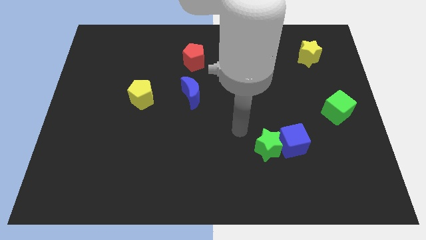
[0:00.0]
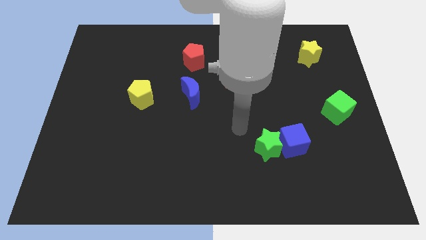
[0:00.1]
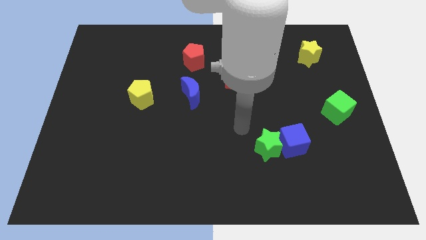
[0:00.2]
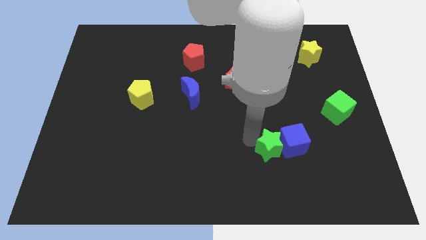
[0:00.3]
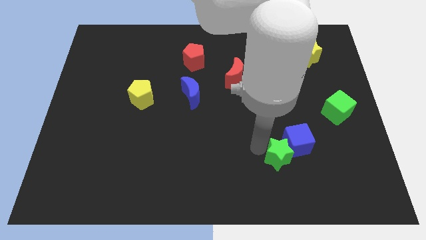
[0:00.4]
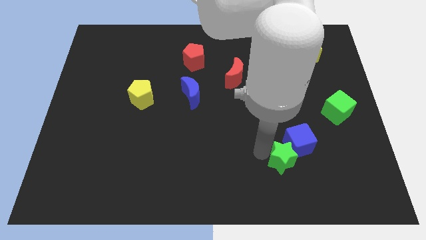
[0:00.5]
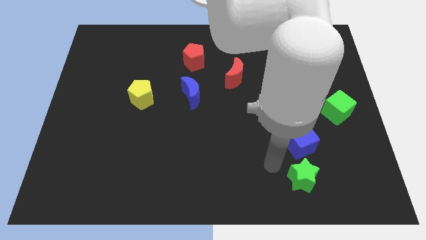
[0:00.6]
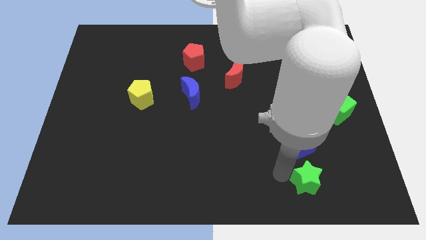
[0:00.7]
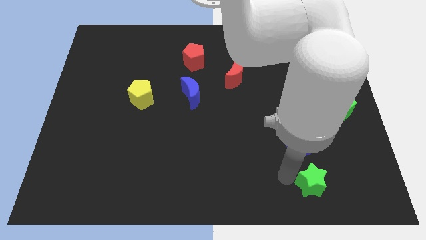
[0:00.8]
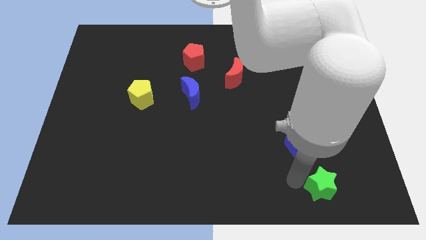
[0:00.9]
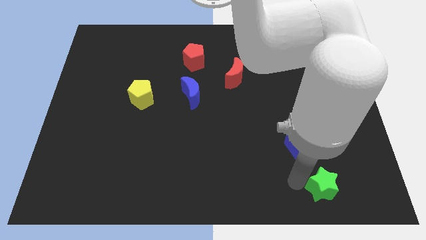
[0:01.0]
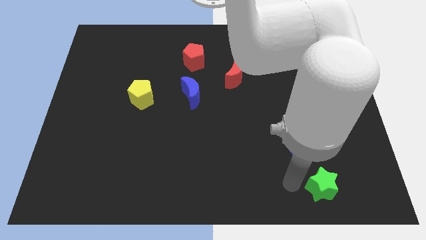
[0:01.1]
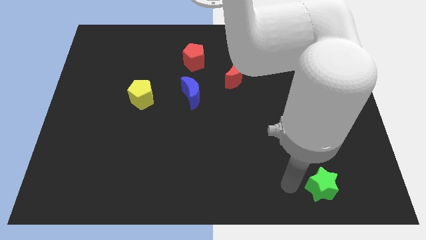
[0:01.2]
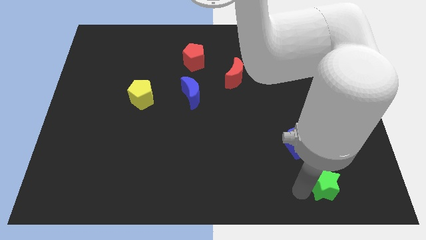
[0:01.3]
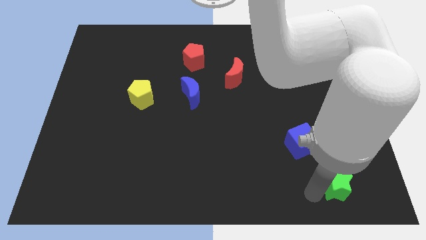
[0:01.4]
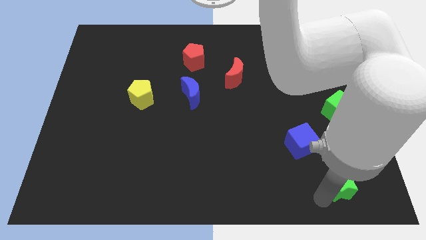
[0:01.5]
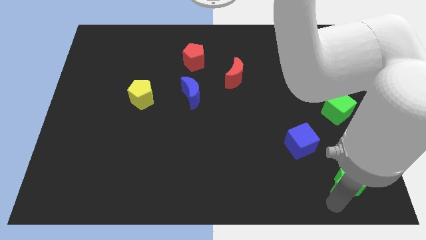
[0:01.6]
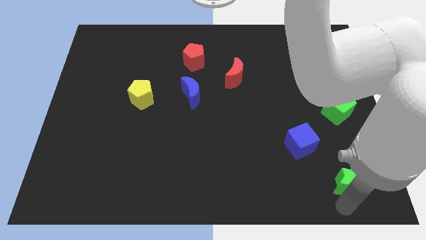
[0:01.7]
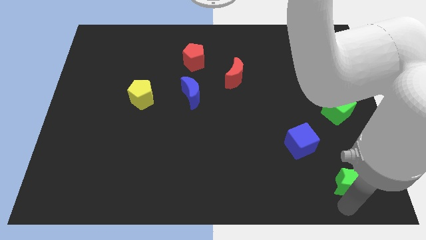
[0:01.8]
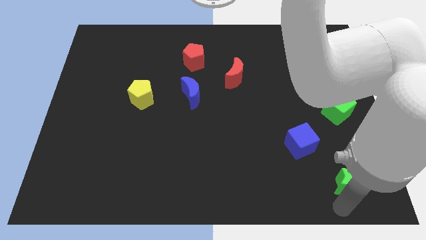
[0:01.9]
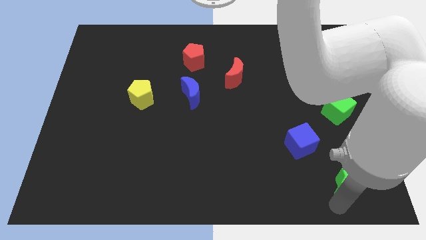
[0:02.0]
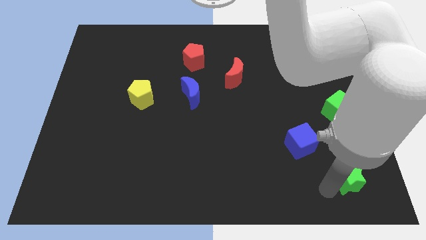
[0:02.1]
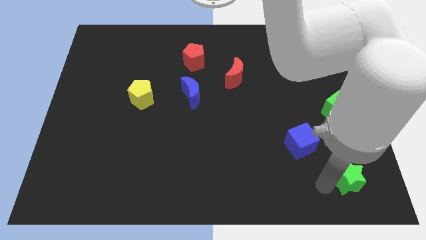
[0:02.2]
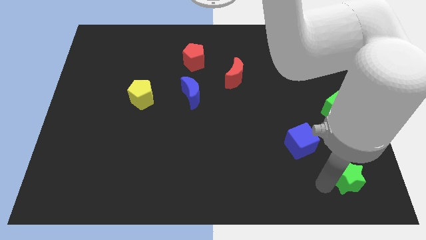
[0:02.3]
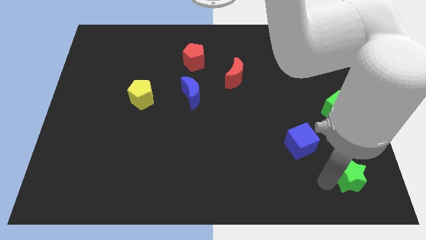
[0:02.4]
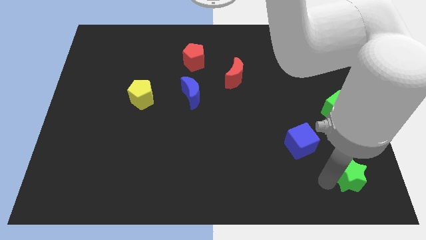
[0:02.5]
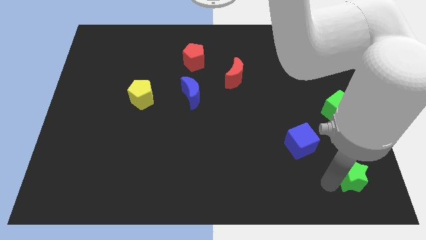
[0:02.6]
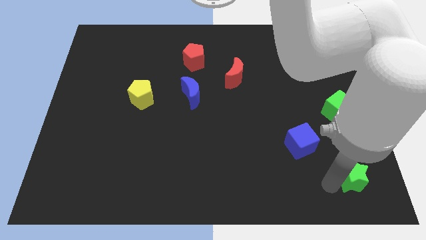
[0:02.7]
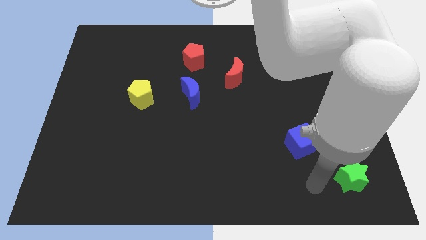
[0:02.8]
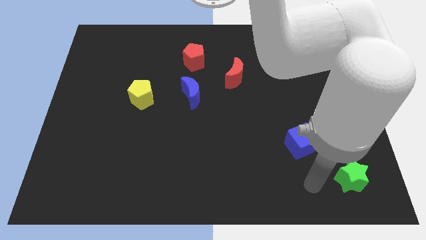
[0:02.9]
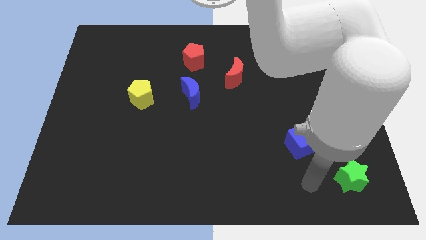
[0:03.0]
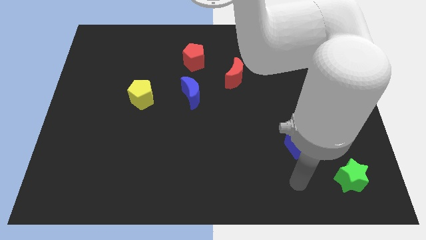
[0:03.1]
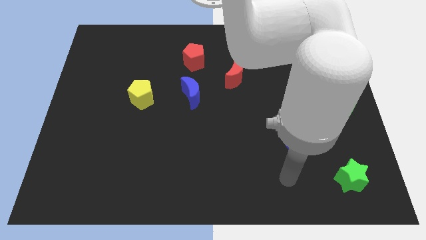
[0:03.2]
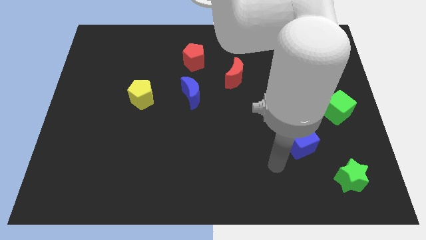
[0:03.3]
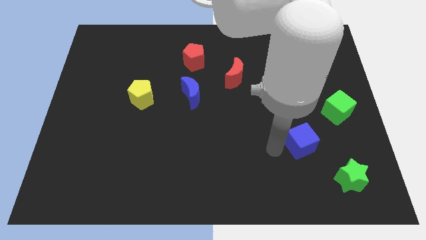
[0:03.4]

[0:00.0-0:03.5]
move the green star vertically to the bottom side of the green cube

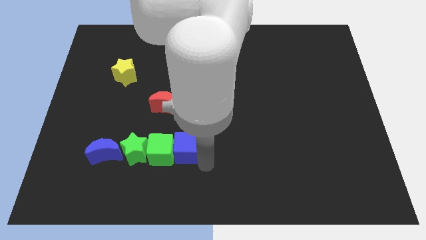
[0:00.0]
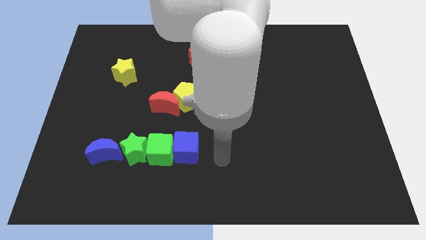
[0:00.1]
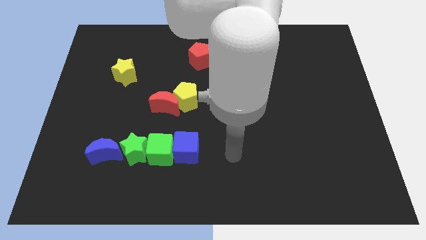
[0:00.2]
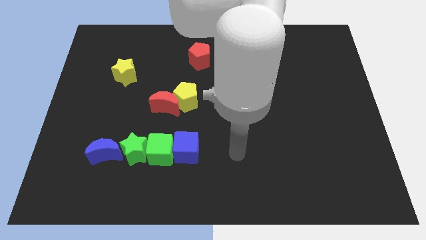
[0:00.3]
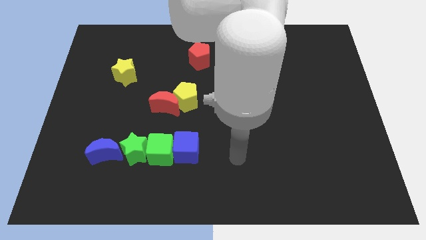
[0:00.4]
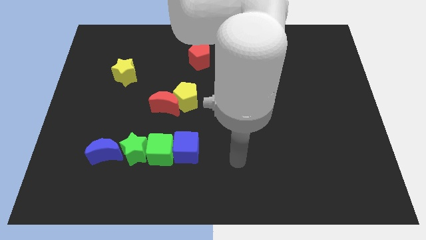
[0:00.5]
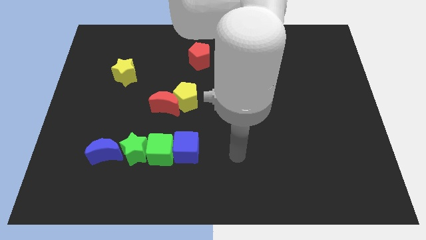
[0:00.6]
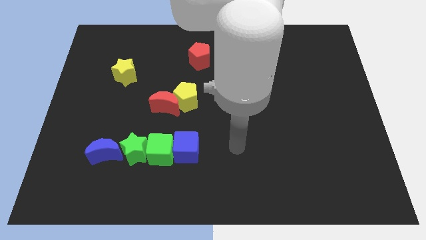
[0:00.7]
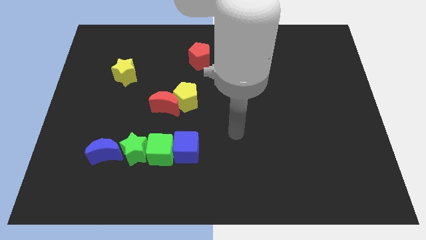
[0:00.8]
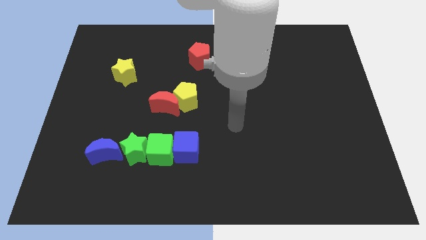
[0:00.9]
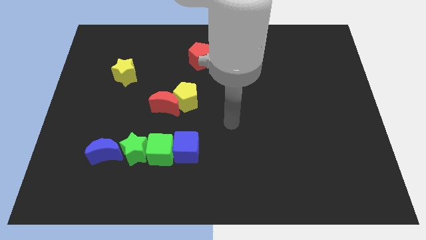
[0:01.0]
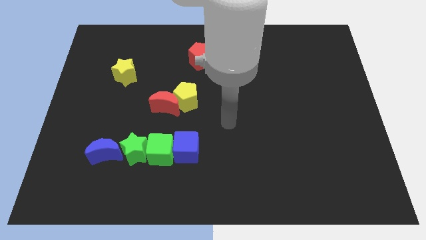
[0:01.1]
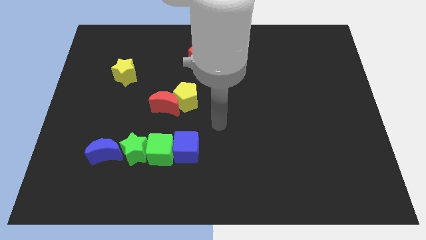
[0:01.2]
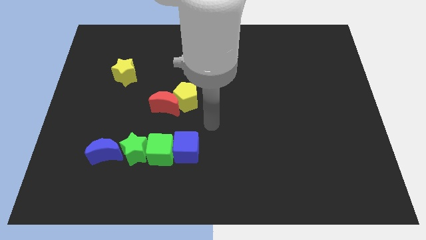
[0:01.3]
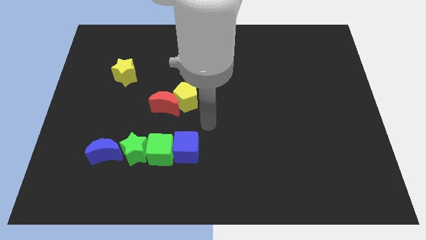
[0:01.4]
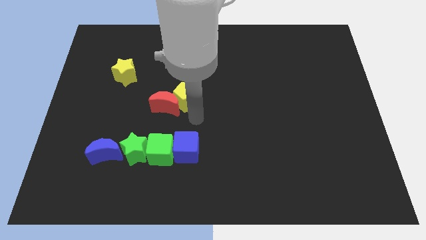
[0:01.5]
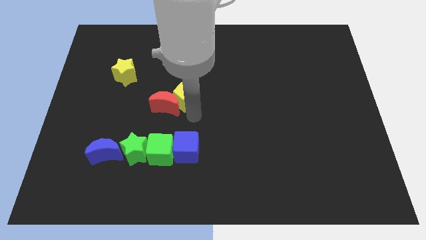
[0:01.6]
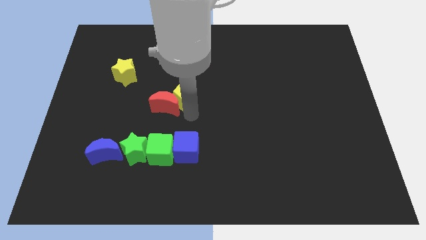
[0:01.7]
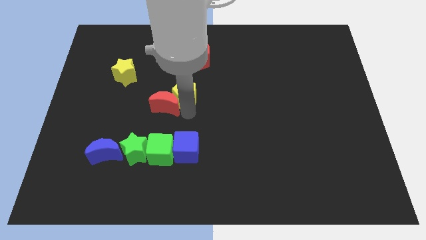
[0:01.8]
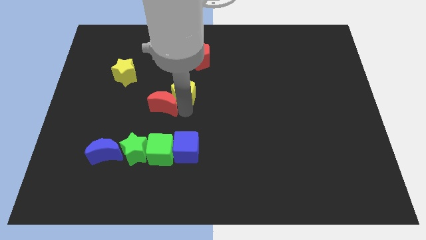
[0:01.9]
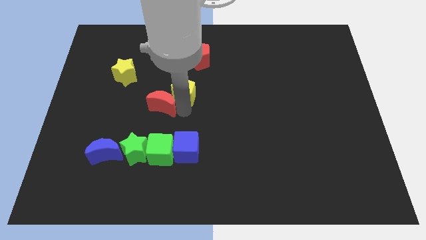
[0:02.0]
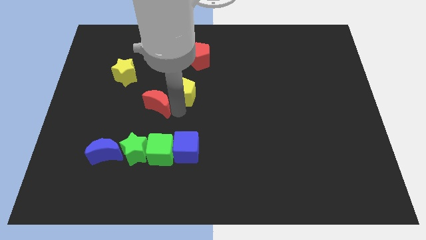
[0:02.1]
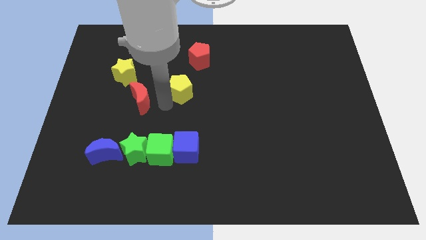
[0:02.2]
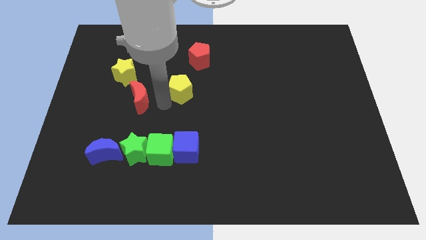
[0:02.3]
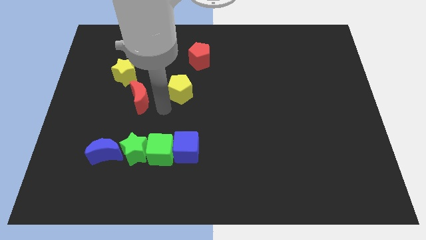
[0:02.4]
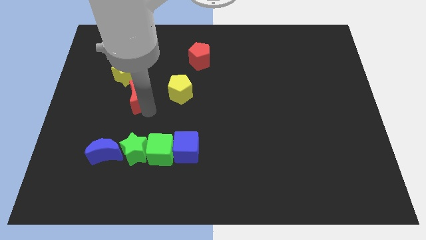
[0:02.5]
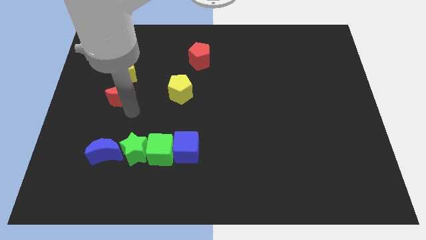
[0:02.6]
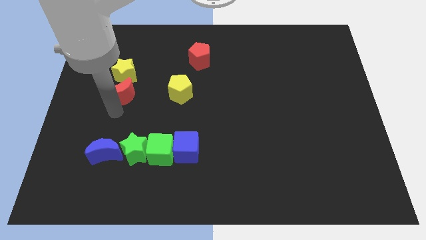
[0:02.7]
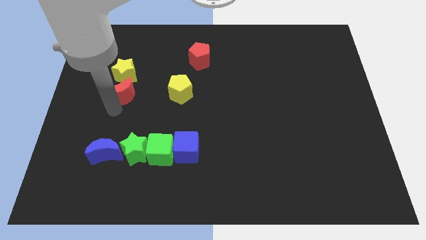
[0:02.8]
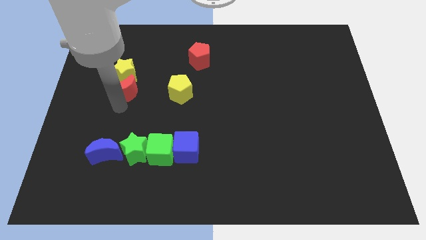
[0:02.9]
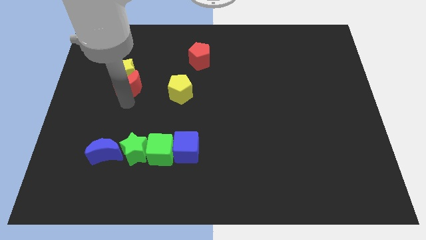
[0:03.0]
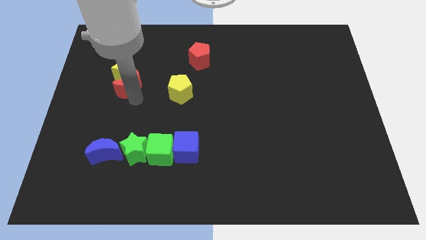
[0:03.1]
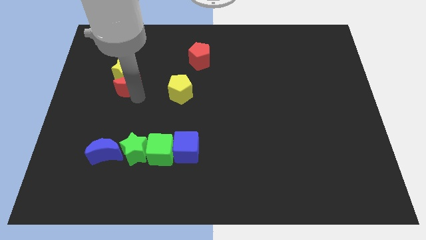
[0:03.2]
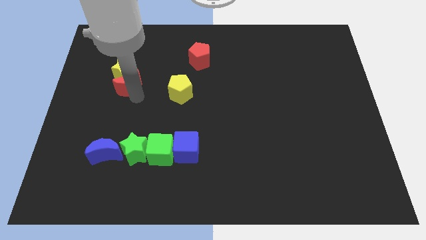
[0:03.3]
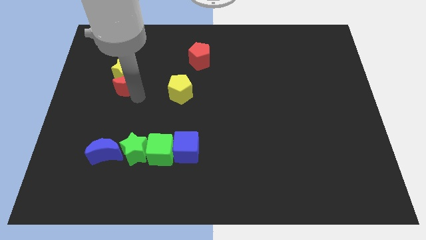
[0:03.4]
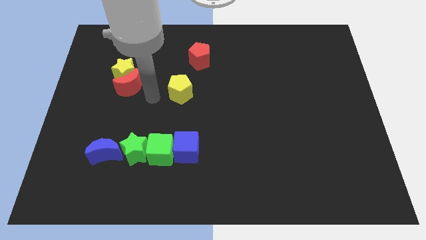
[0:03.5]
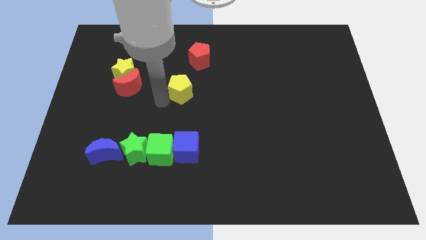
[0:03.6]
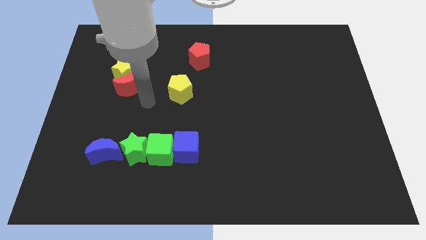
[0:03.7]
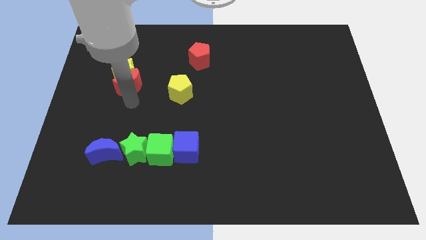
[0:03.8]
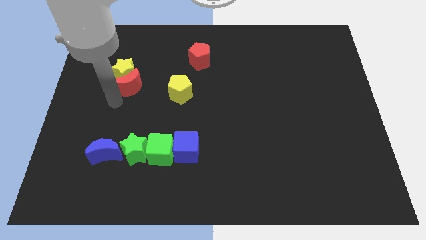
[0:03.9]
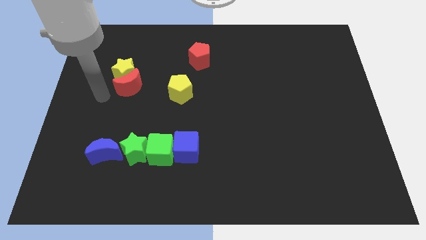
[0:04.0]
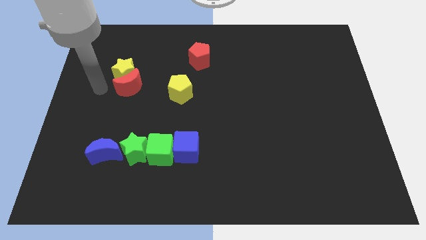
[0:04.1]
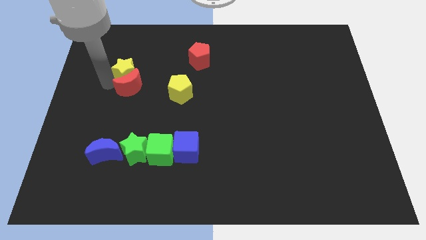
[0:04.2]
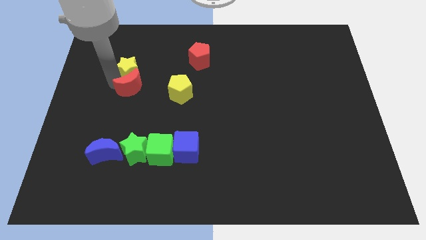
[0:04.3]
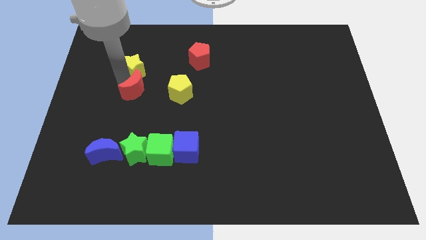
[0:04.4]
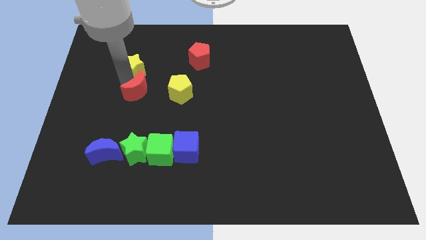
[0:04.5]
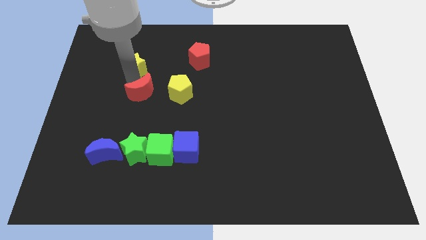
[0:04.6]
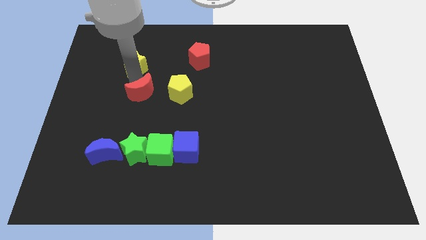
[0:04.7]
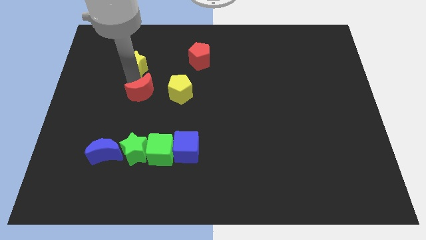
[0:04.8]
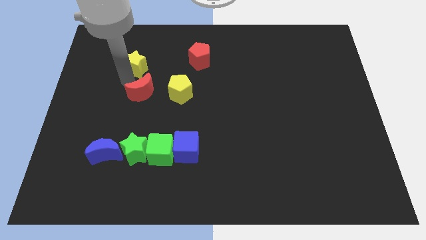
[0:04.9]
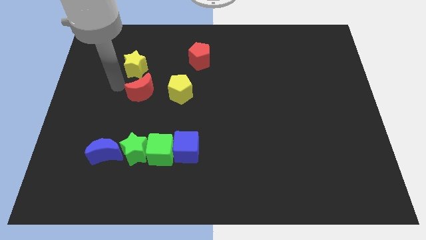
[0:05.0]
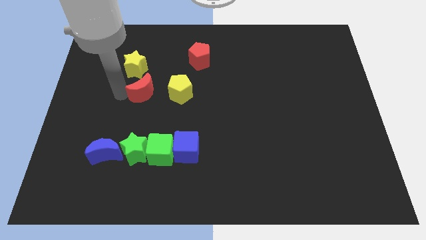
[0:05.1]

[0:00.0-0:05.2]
push the red crescent towards the yellow star on top left of the board

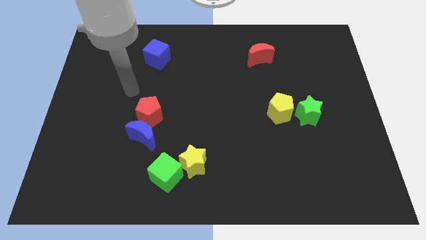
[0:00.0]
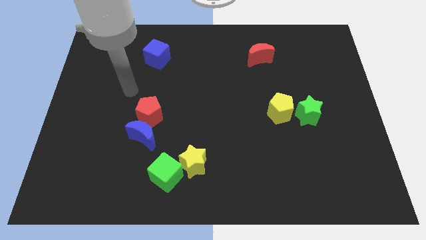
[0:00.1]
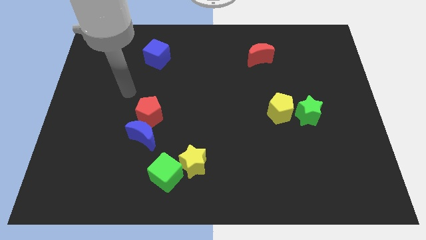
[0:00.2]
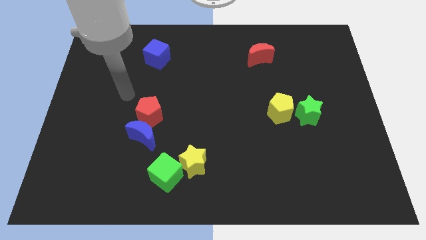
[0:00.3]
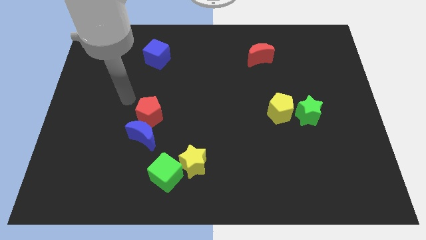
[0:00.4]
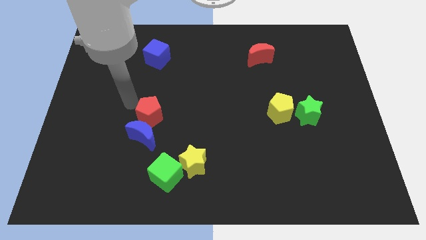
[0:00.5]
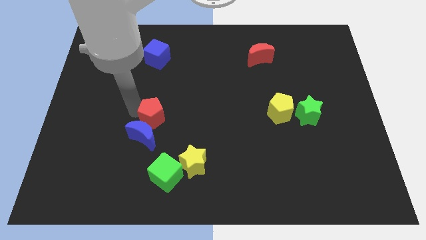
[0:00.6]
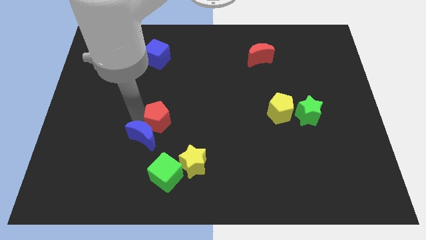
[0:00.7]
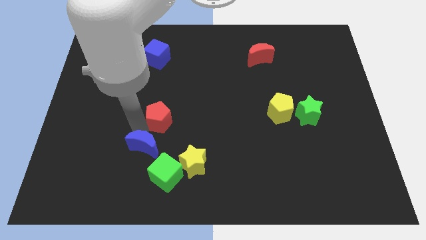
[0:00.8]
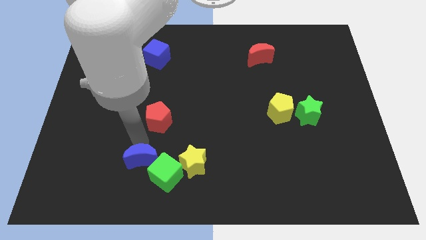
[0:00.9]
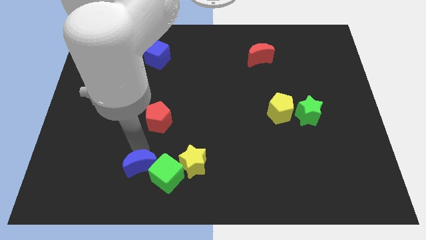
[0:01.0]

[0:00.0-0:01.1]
move the blue crescent into the green cube
